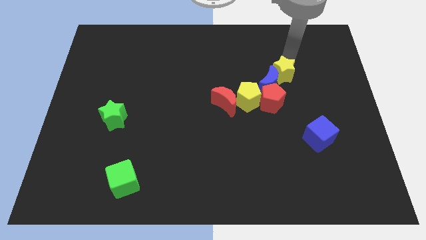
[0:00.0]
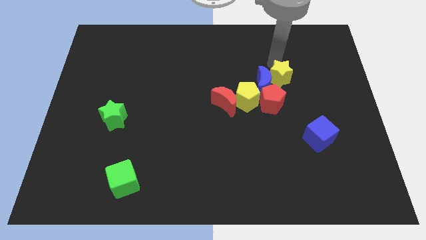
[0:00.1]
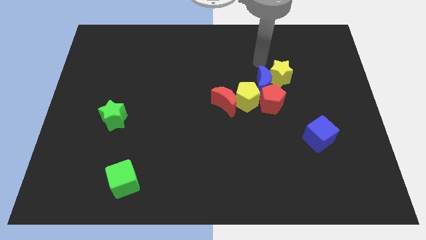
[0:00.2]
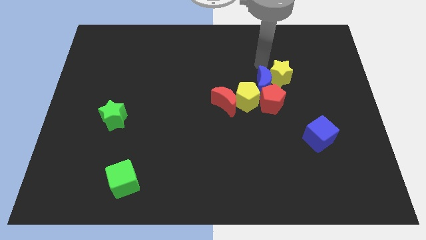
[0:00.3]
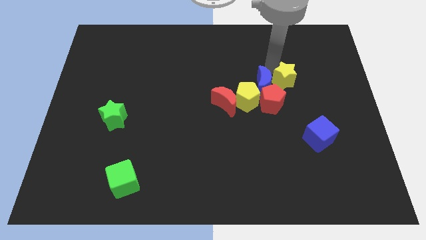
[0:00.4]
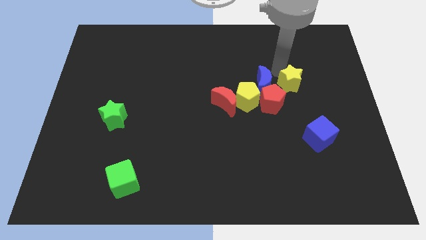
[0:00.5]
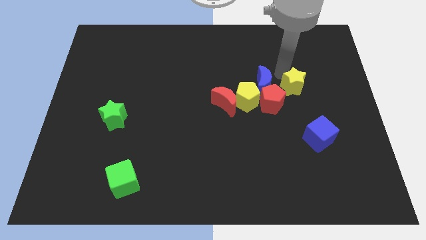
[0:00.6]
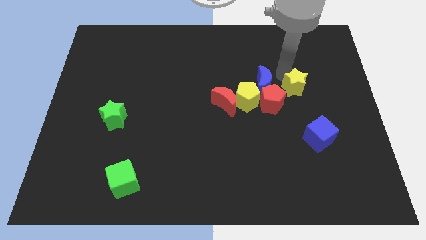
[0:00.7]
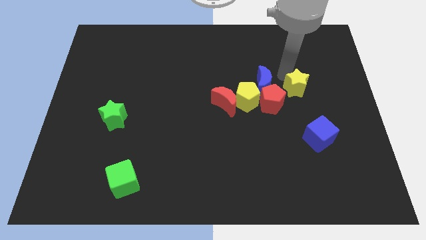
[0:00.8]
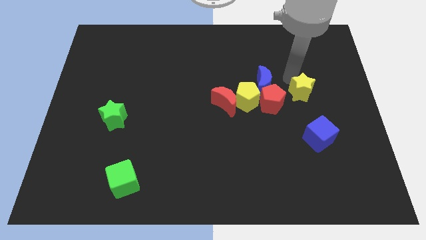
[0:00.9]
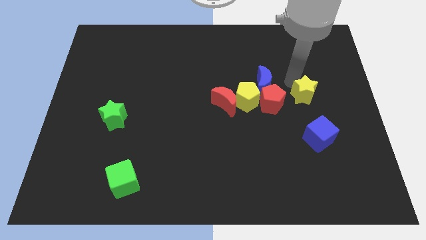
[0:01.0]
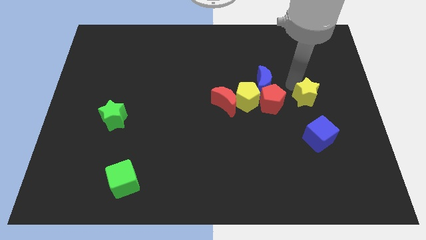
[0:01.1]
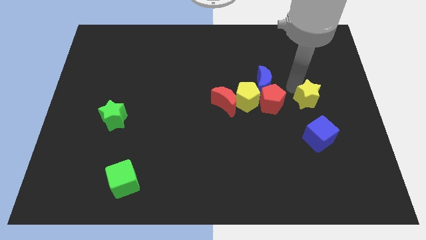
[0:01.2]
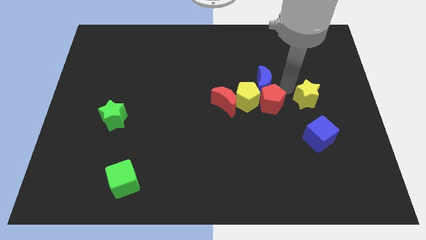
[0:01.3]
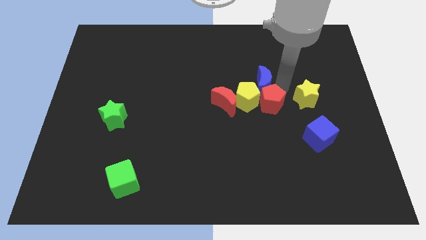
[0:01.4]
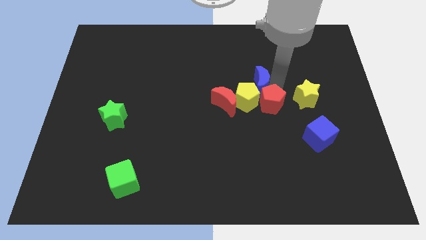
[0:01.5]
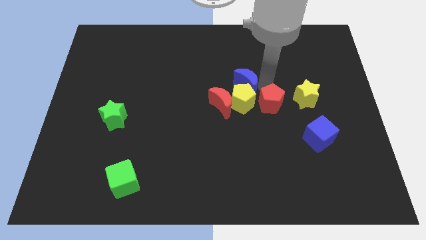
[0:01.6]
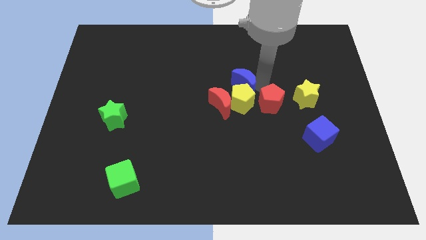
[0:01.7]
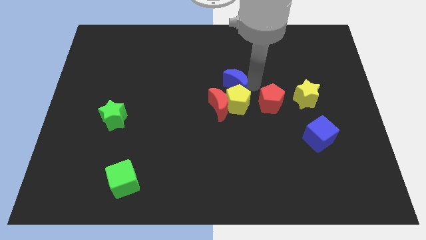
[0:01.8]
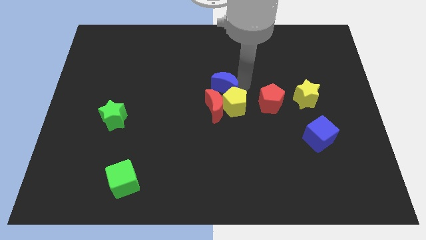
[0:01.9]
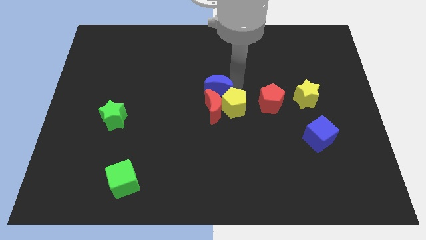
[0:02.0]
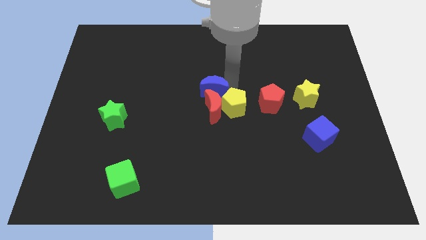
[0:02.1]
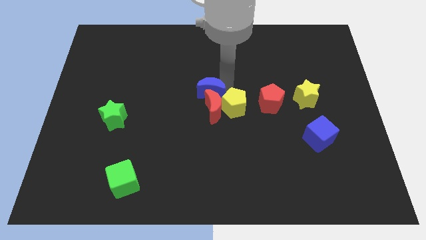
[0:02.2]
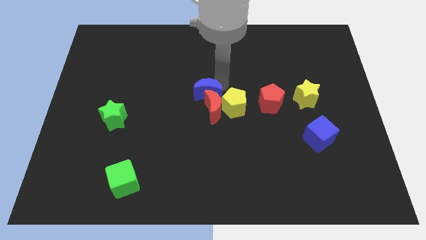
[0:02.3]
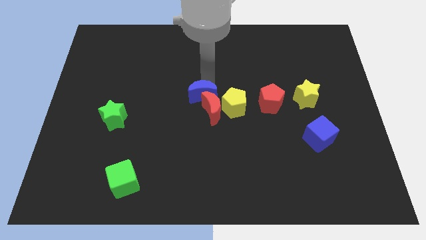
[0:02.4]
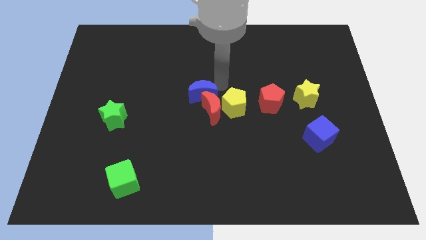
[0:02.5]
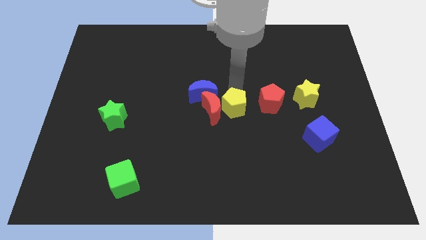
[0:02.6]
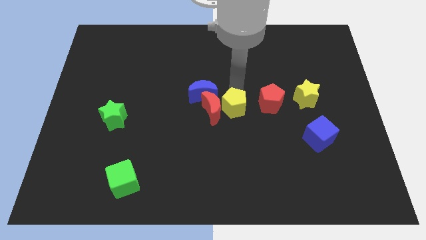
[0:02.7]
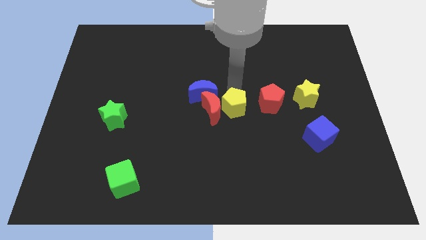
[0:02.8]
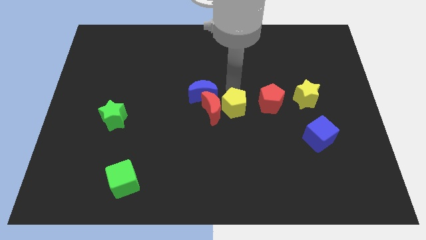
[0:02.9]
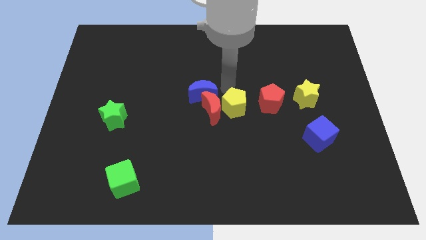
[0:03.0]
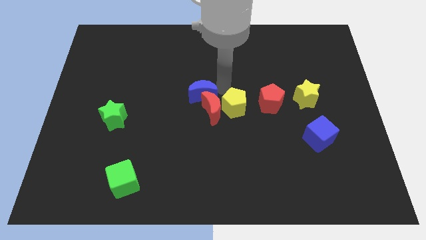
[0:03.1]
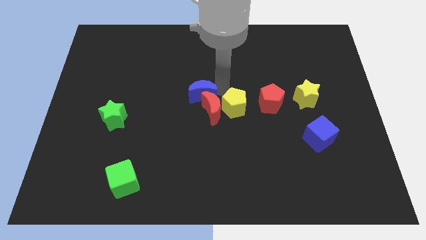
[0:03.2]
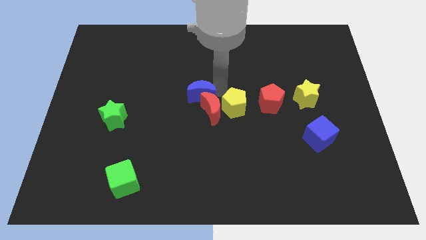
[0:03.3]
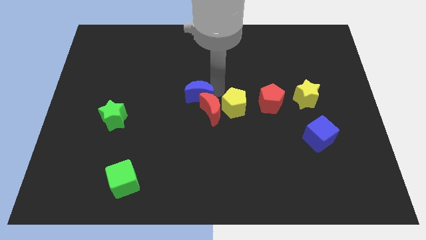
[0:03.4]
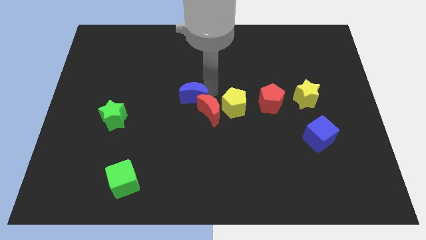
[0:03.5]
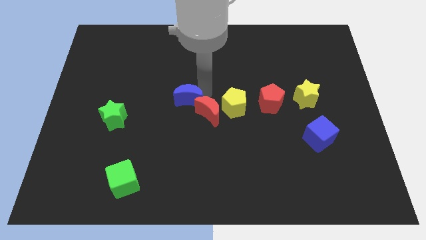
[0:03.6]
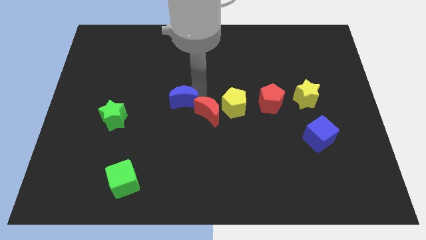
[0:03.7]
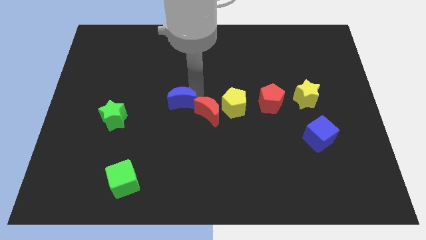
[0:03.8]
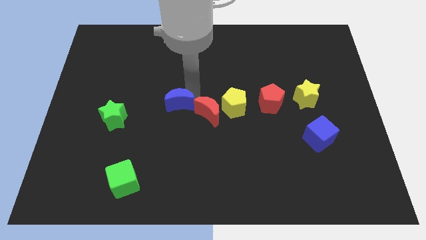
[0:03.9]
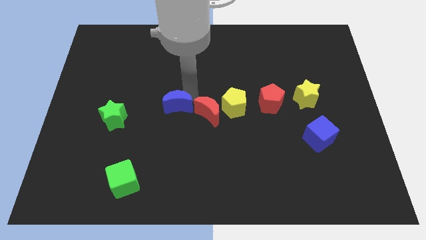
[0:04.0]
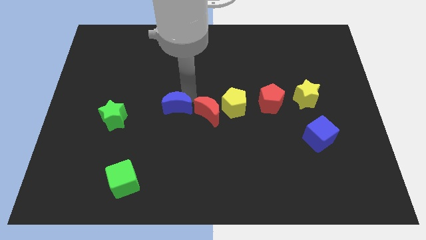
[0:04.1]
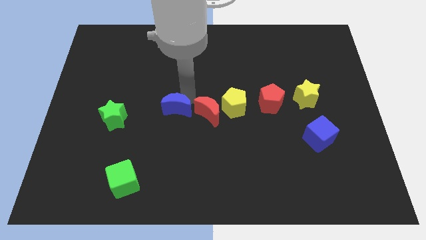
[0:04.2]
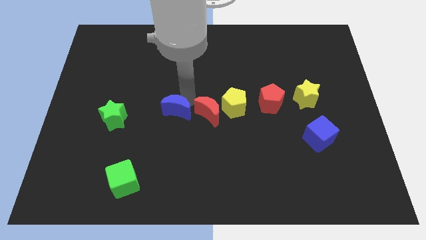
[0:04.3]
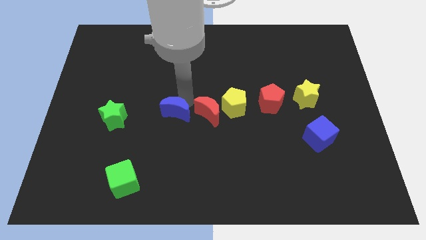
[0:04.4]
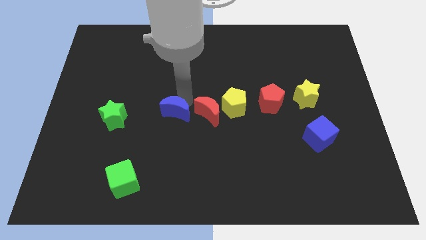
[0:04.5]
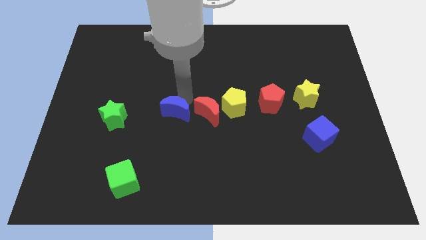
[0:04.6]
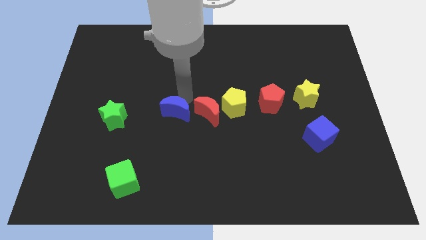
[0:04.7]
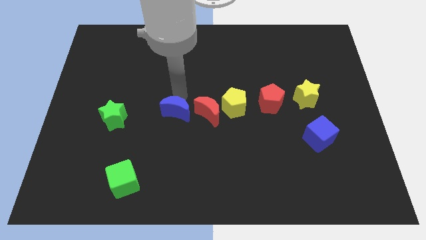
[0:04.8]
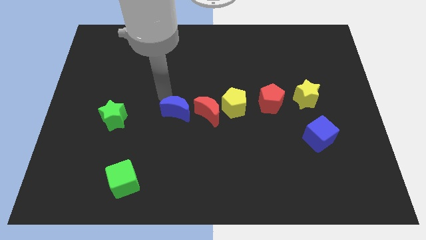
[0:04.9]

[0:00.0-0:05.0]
make a diagonal line with the yellow star red pentagon yellow pentagon red crescent and blue crescent

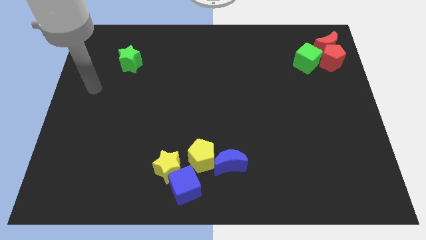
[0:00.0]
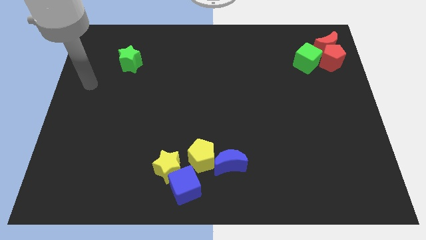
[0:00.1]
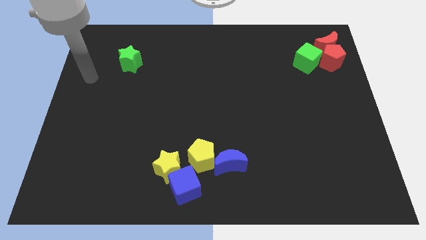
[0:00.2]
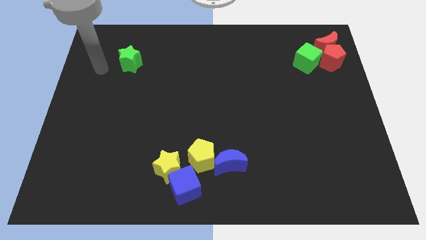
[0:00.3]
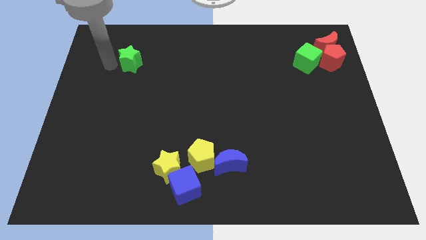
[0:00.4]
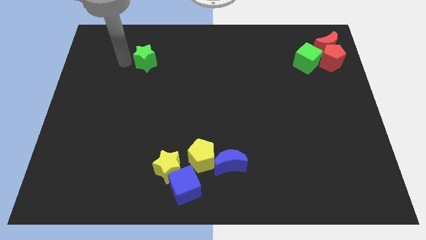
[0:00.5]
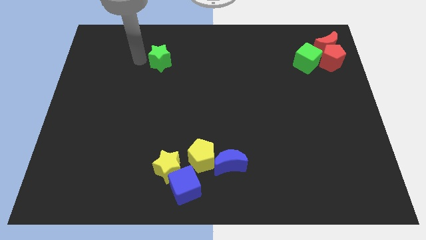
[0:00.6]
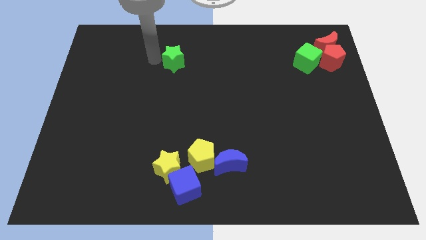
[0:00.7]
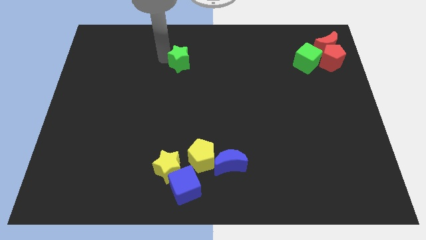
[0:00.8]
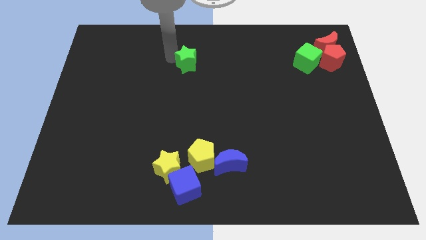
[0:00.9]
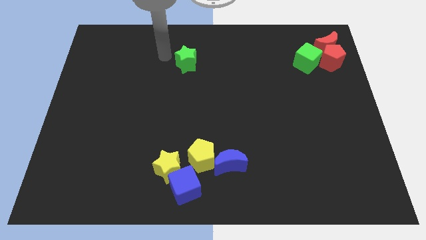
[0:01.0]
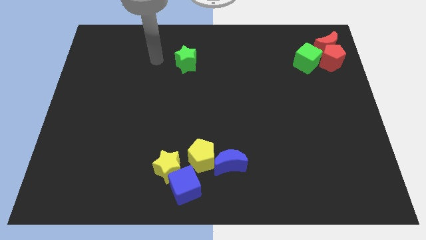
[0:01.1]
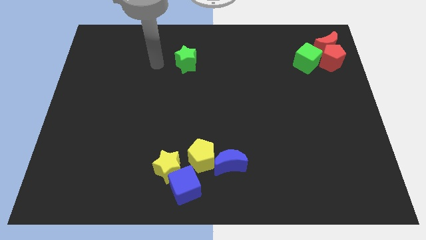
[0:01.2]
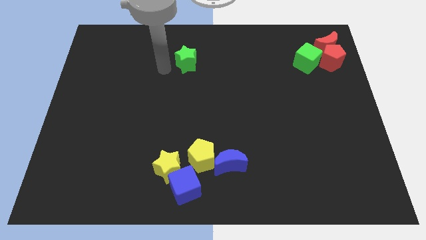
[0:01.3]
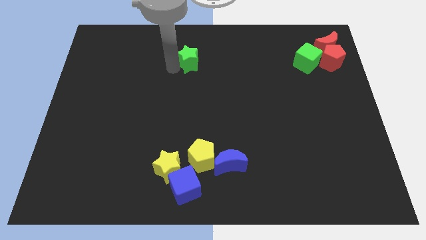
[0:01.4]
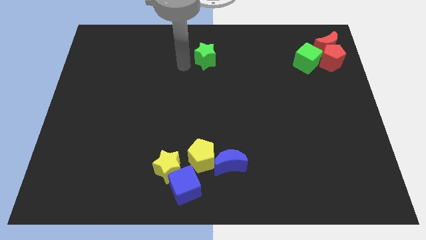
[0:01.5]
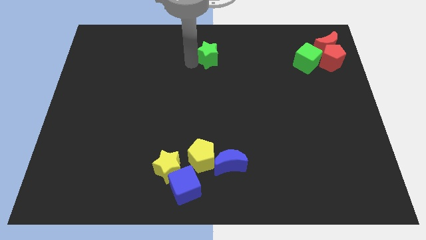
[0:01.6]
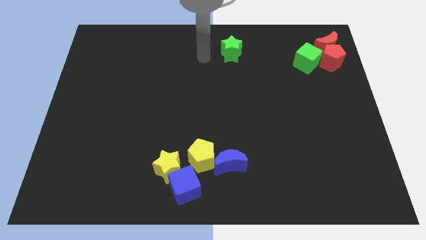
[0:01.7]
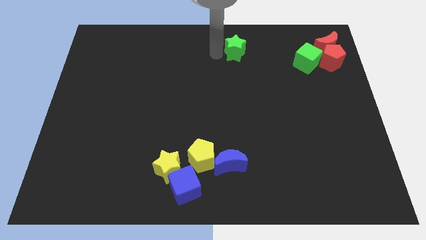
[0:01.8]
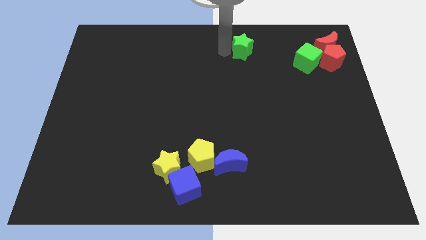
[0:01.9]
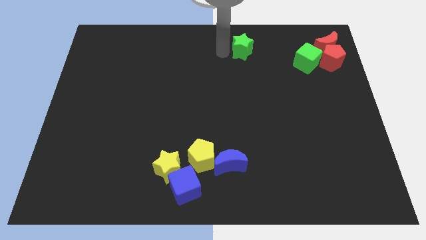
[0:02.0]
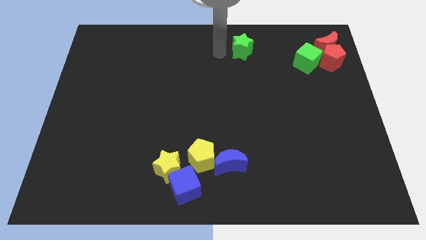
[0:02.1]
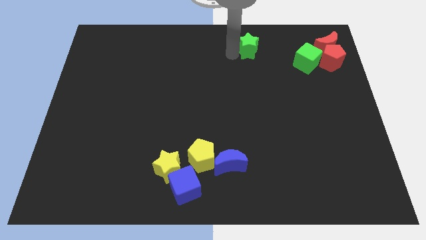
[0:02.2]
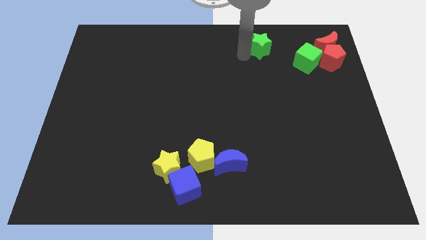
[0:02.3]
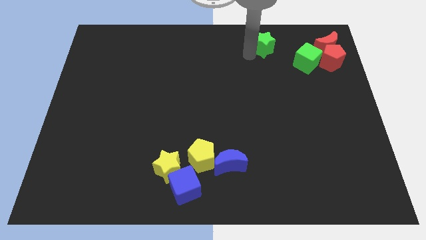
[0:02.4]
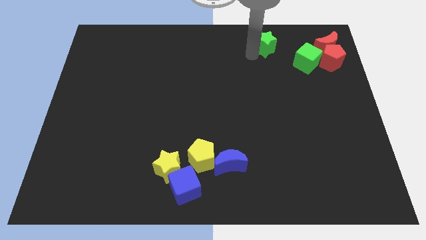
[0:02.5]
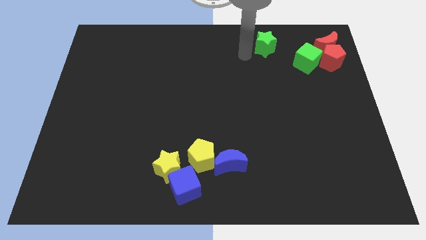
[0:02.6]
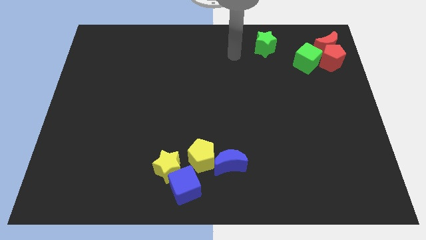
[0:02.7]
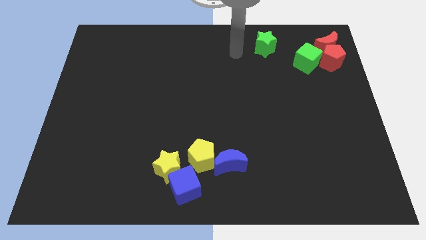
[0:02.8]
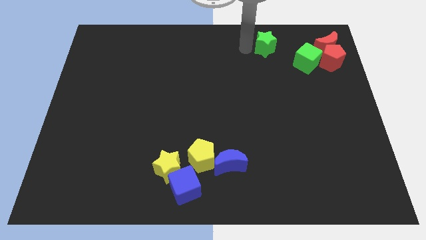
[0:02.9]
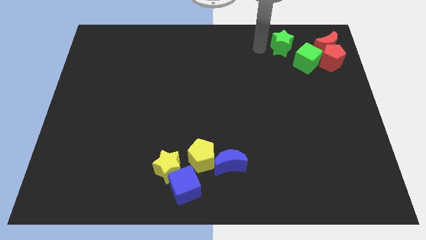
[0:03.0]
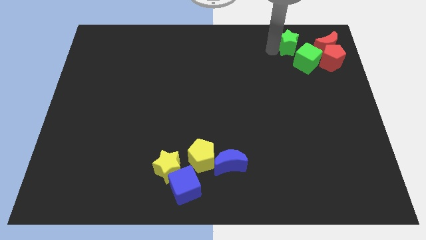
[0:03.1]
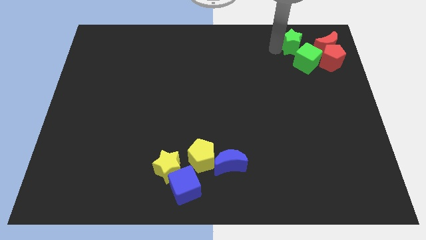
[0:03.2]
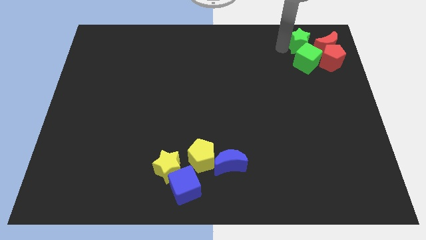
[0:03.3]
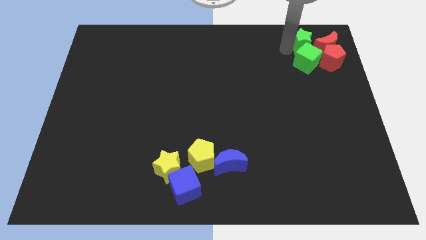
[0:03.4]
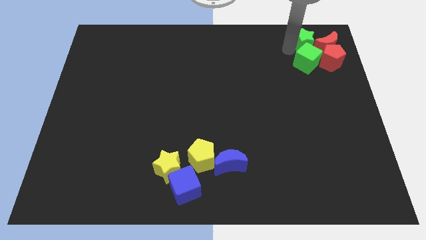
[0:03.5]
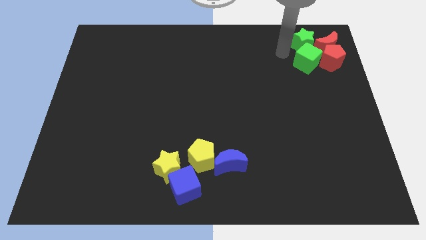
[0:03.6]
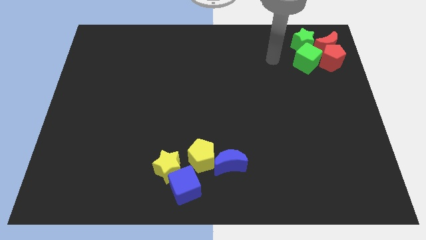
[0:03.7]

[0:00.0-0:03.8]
place a green star left to the red moon

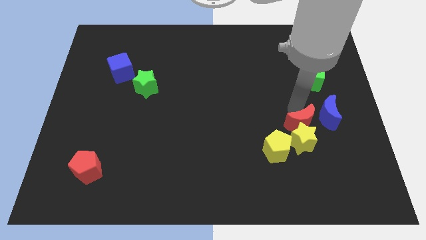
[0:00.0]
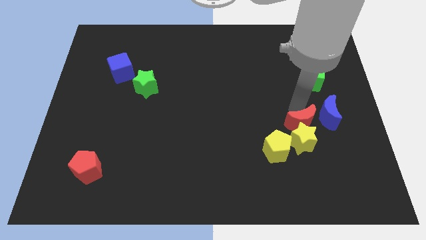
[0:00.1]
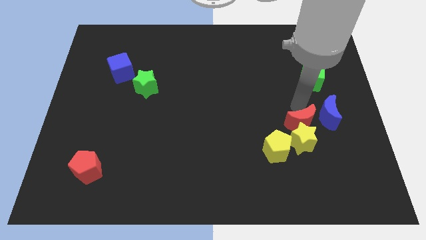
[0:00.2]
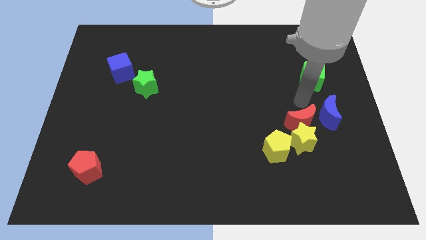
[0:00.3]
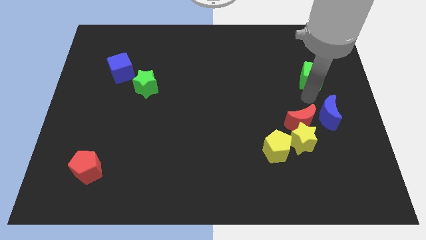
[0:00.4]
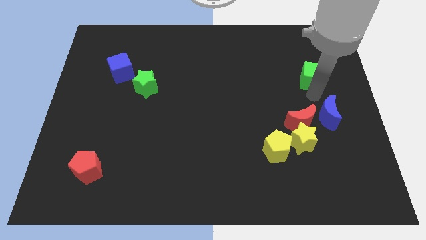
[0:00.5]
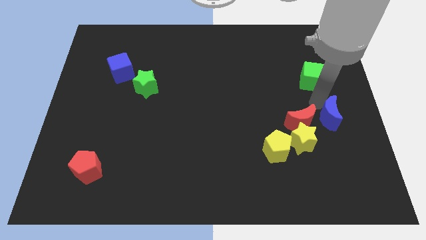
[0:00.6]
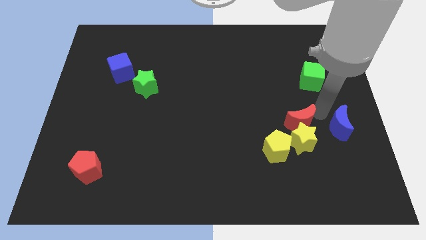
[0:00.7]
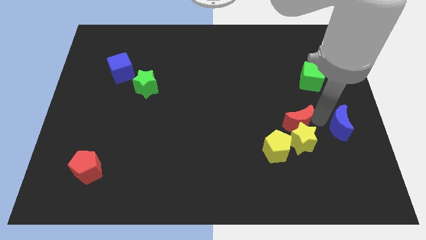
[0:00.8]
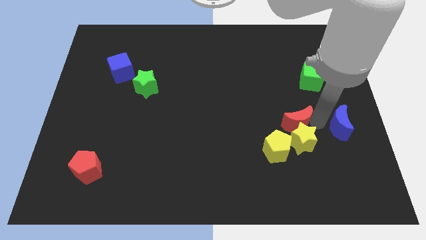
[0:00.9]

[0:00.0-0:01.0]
move the blue moon slightly to bottom center of the board
